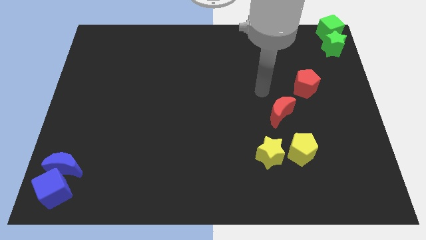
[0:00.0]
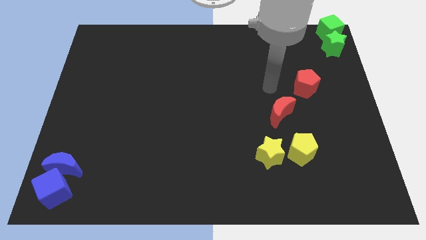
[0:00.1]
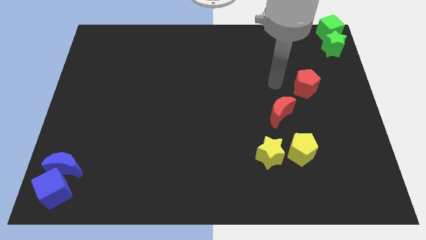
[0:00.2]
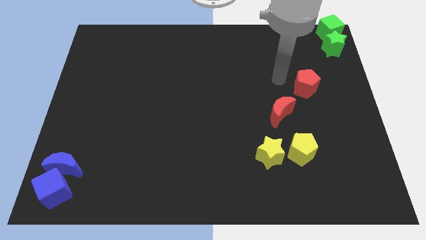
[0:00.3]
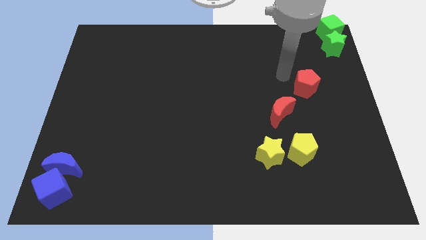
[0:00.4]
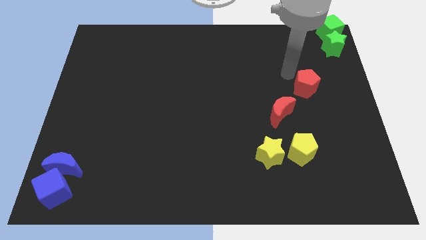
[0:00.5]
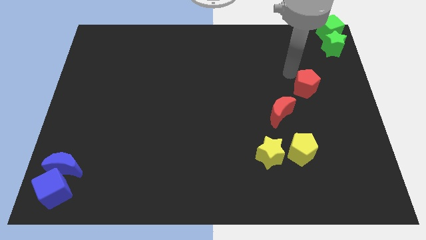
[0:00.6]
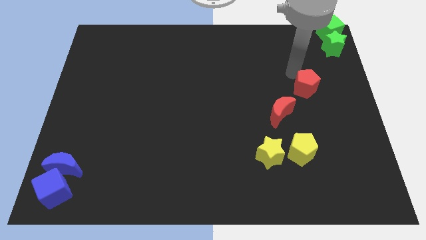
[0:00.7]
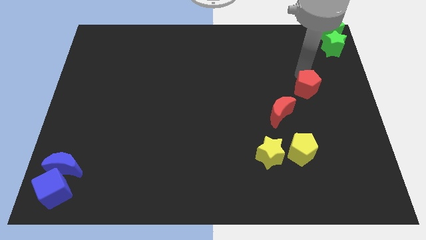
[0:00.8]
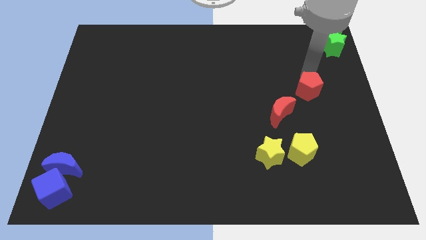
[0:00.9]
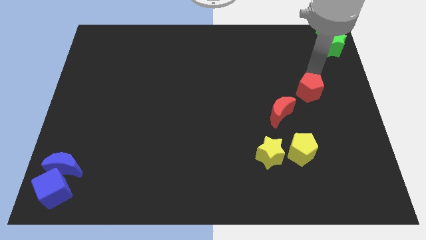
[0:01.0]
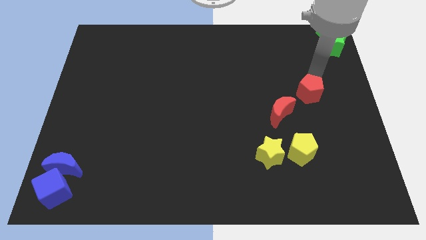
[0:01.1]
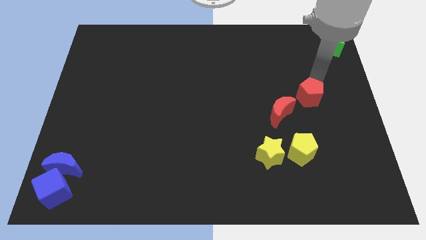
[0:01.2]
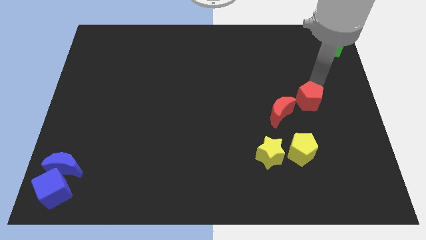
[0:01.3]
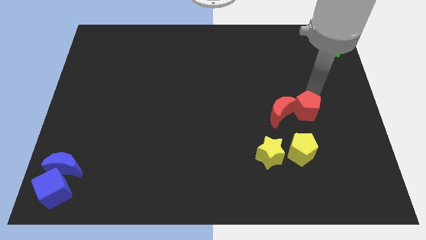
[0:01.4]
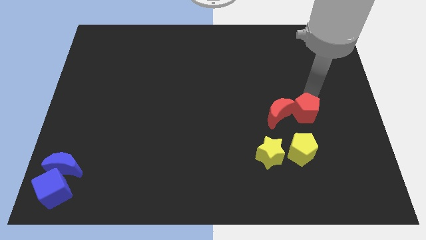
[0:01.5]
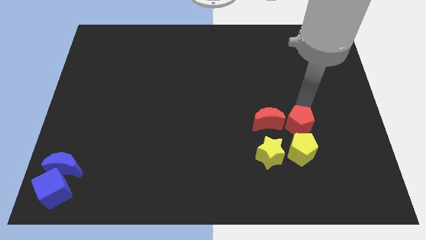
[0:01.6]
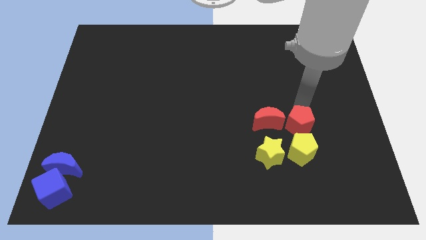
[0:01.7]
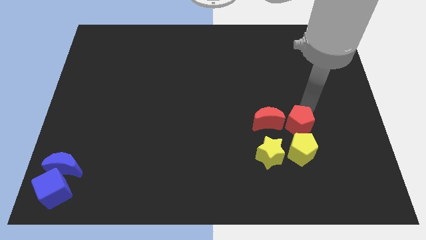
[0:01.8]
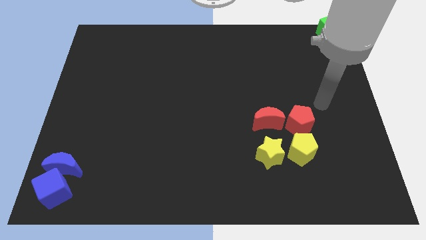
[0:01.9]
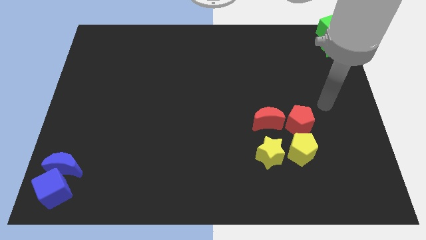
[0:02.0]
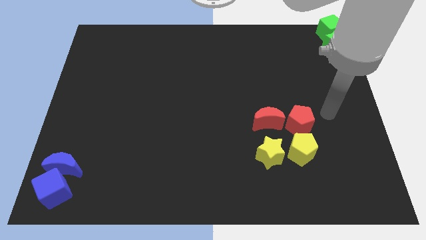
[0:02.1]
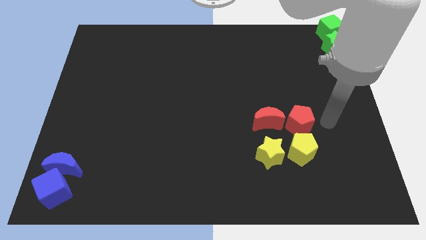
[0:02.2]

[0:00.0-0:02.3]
place the red pentaggon to the right of the red moon

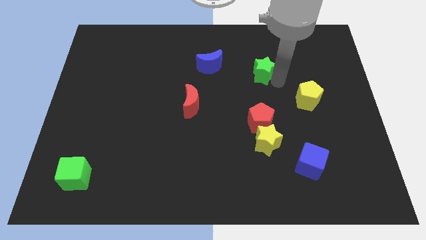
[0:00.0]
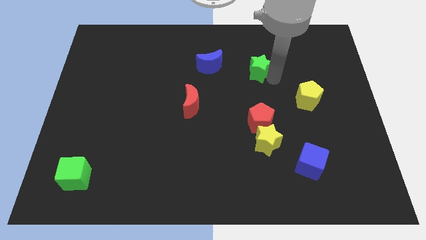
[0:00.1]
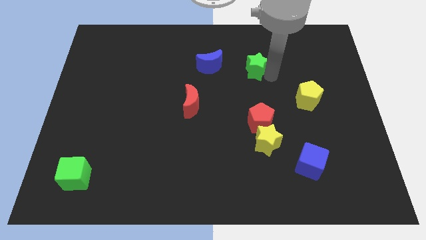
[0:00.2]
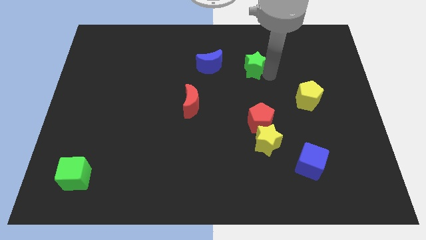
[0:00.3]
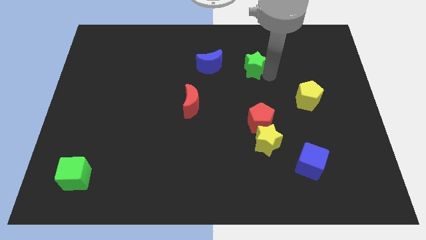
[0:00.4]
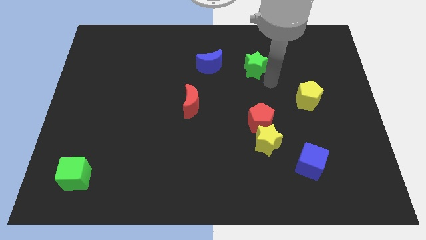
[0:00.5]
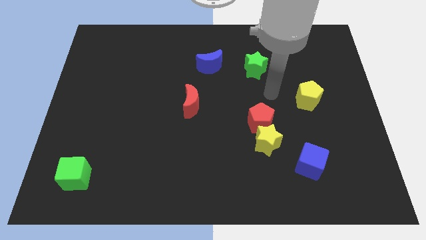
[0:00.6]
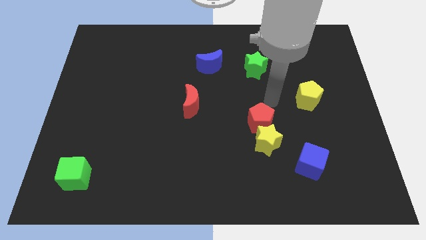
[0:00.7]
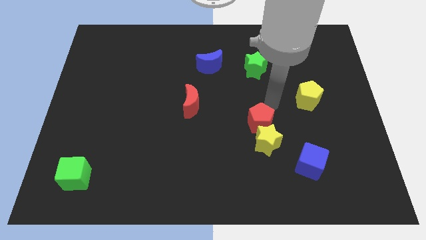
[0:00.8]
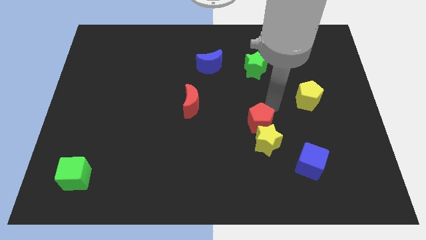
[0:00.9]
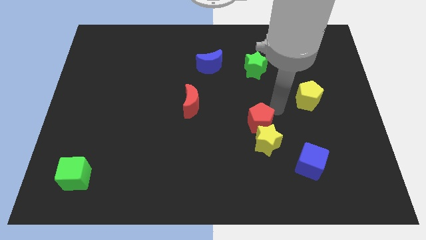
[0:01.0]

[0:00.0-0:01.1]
push the green star above the red pentagon

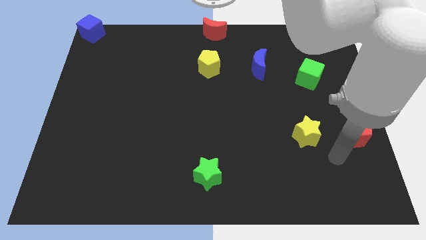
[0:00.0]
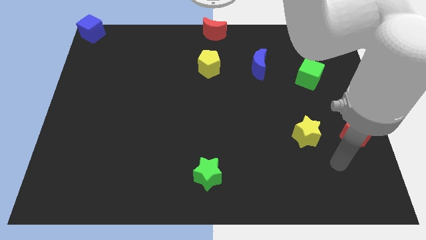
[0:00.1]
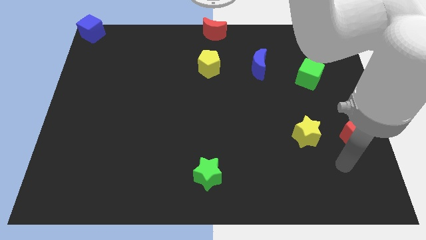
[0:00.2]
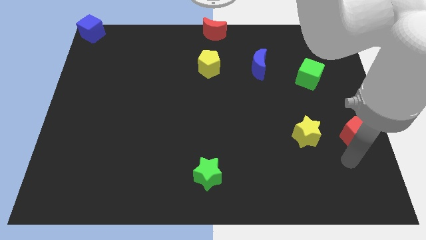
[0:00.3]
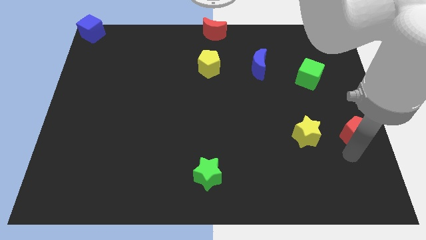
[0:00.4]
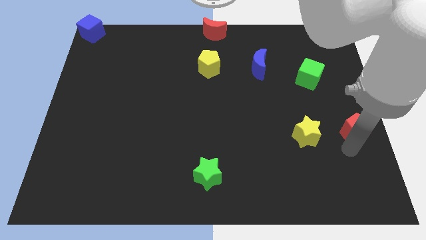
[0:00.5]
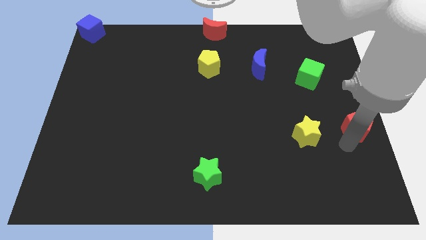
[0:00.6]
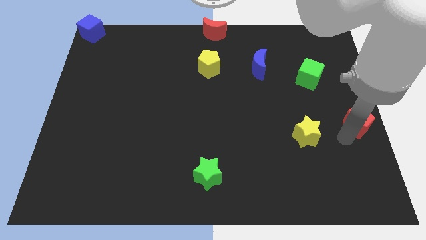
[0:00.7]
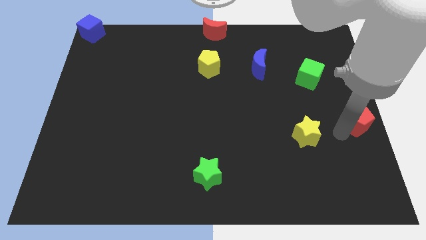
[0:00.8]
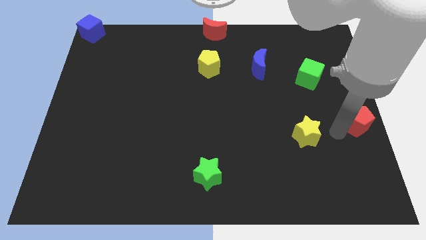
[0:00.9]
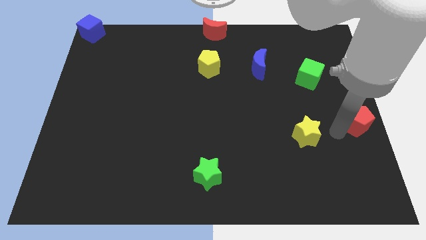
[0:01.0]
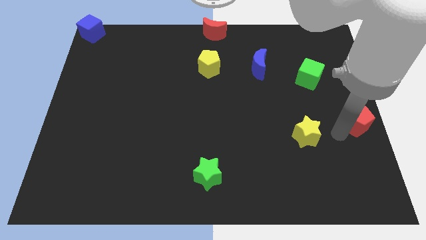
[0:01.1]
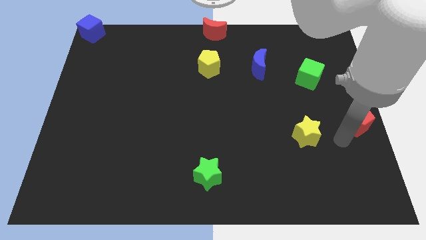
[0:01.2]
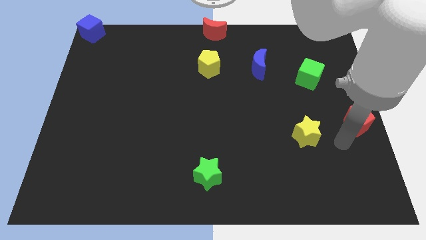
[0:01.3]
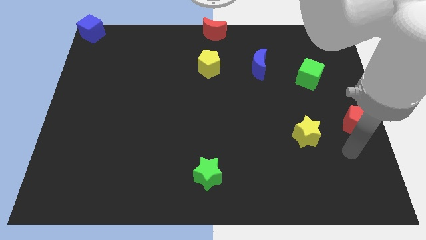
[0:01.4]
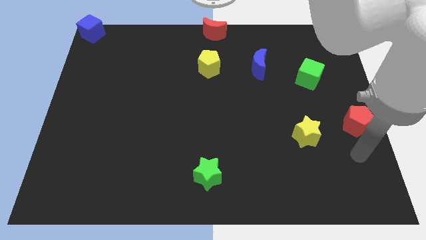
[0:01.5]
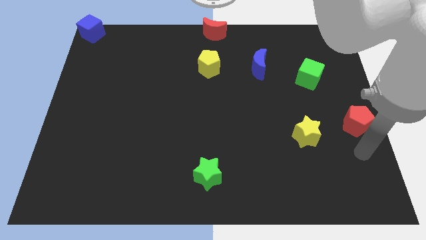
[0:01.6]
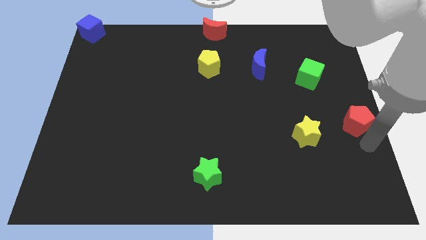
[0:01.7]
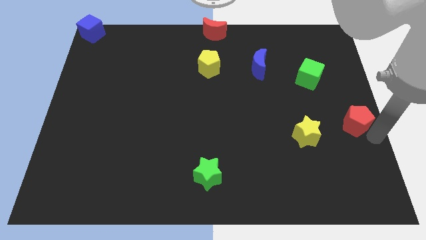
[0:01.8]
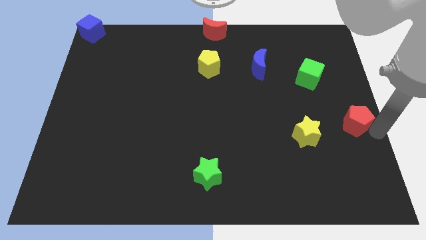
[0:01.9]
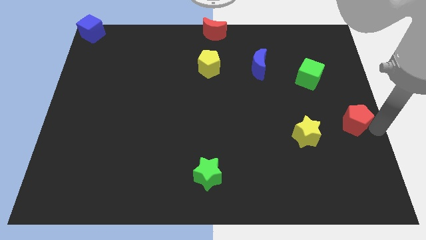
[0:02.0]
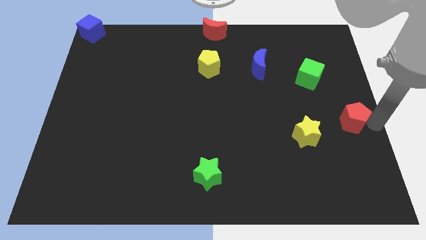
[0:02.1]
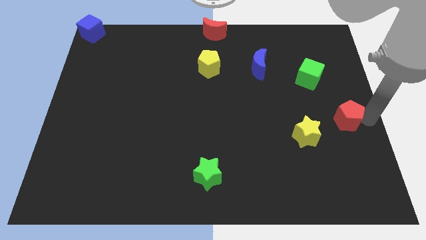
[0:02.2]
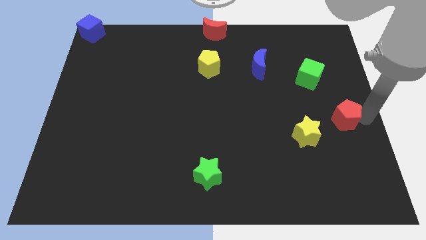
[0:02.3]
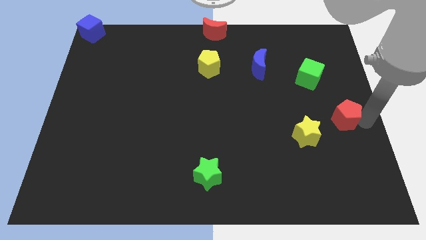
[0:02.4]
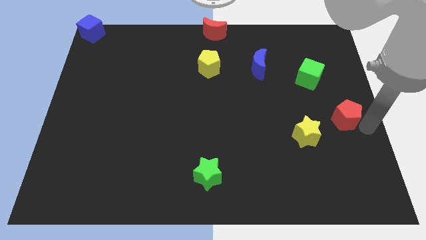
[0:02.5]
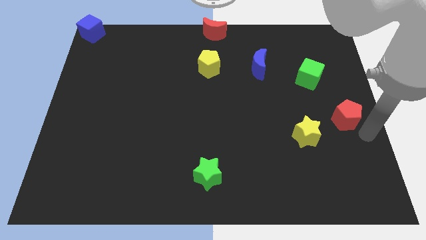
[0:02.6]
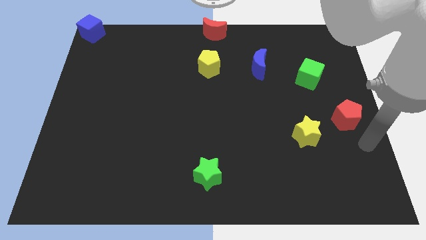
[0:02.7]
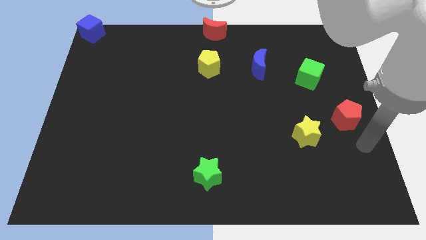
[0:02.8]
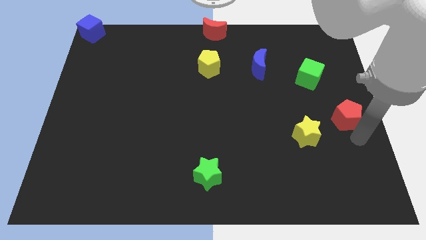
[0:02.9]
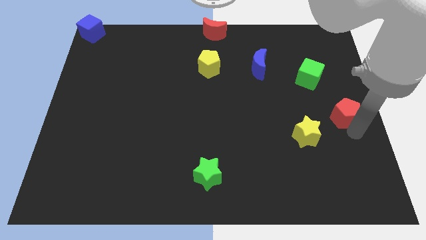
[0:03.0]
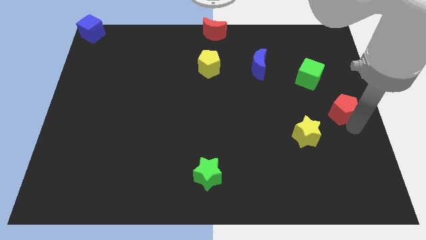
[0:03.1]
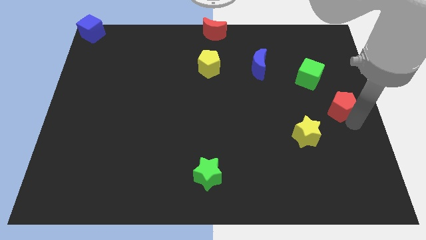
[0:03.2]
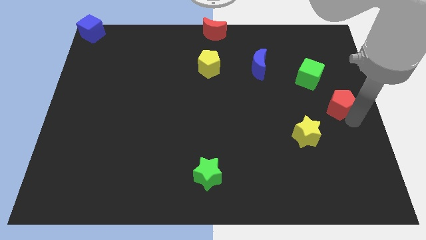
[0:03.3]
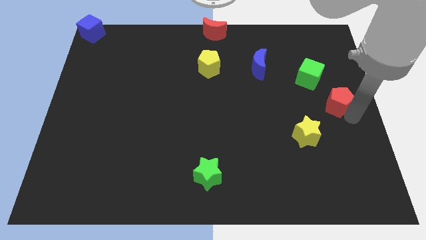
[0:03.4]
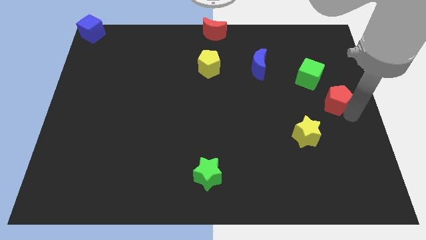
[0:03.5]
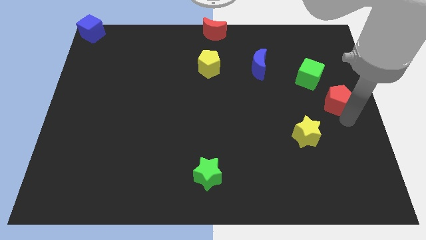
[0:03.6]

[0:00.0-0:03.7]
place the red pentagon at the bottom right of the green cube

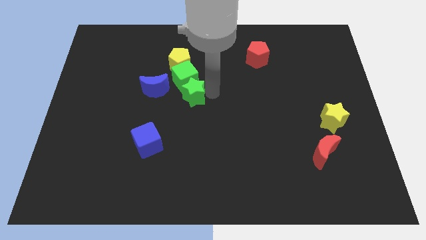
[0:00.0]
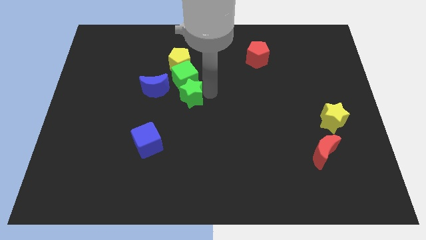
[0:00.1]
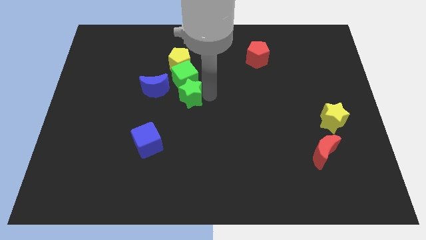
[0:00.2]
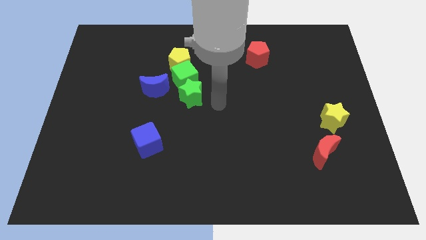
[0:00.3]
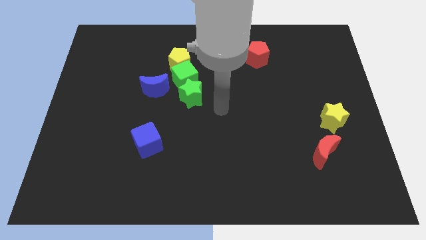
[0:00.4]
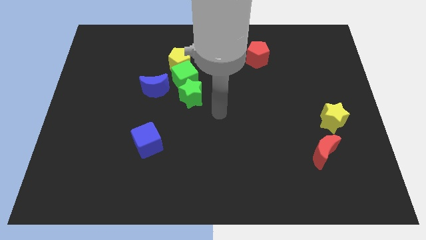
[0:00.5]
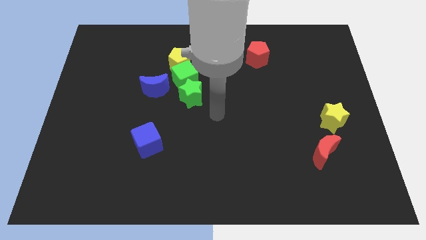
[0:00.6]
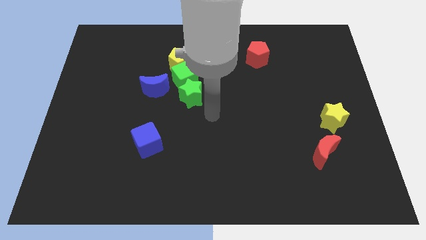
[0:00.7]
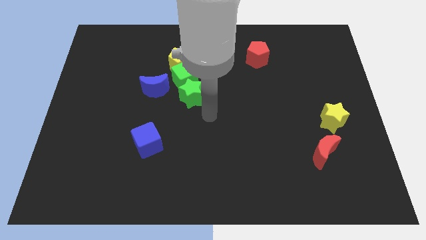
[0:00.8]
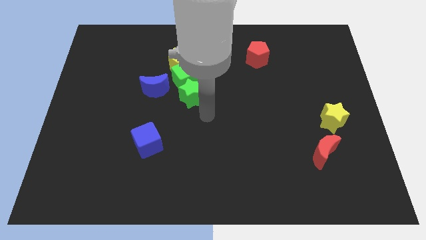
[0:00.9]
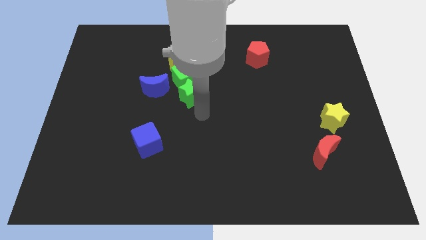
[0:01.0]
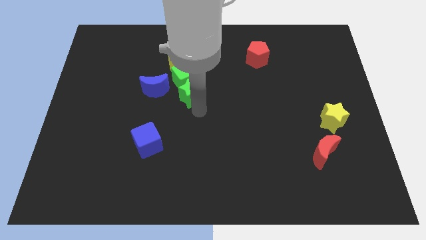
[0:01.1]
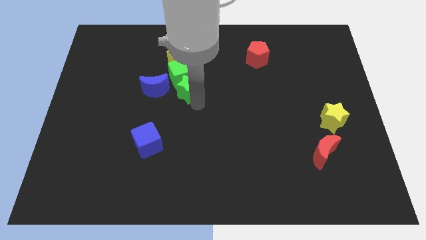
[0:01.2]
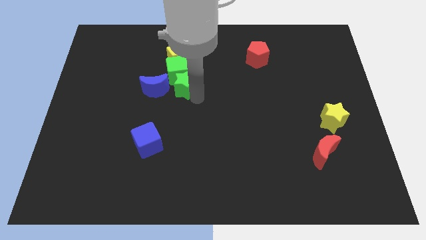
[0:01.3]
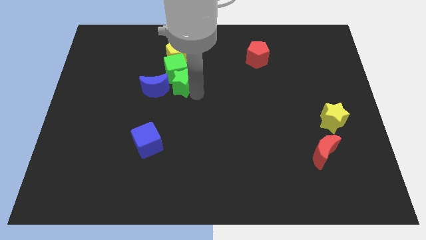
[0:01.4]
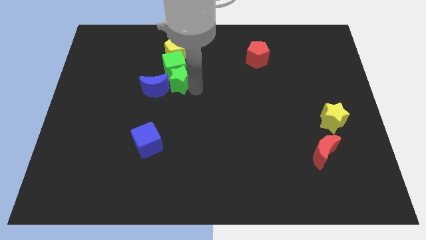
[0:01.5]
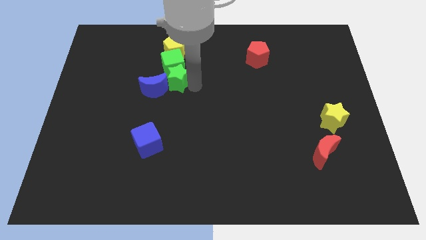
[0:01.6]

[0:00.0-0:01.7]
place green star to the right of the blue moon

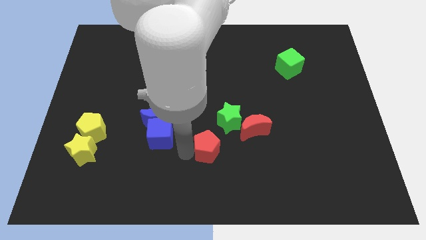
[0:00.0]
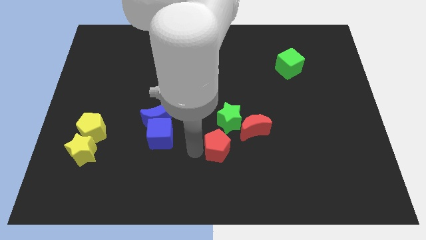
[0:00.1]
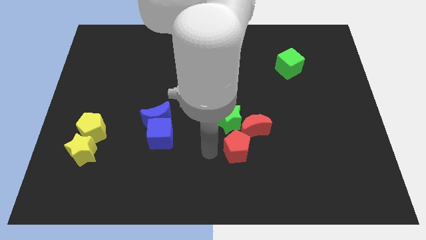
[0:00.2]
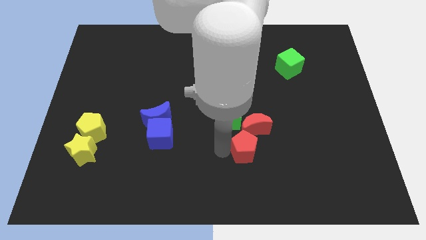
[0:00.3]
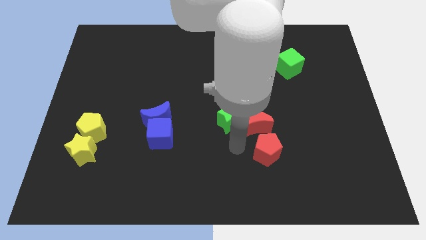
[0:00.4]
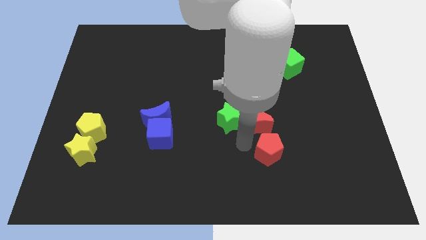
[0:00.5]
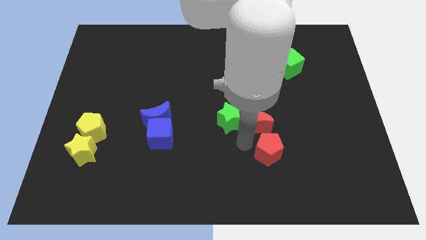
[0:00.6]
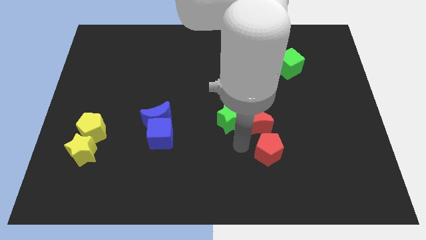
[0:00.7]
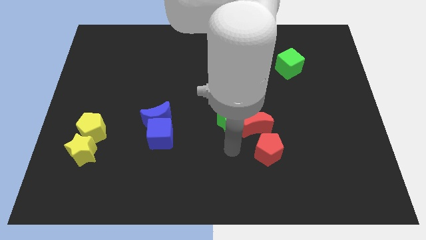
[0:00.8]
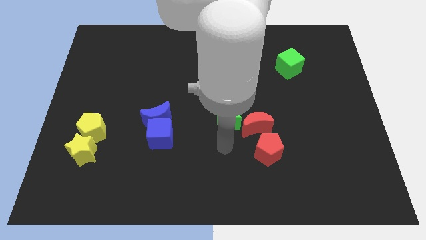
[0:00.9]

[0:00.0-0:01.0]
move the red pentagon below the red crescent
